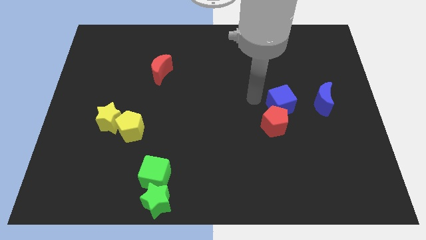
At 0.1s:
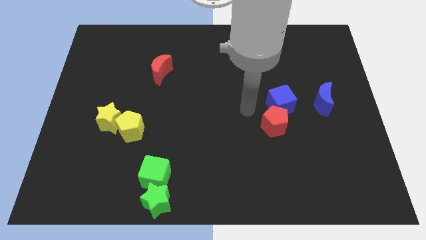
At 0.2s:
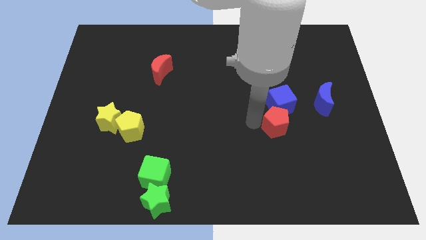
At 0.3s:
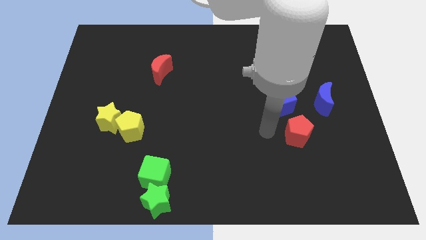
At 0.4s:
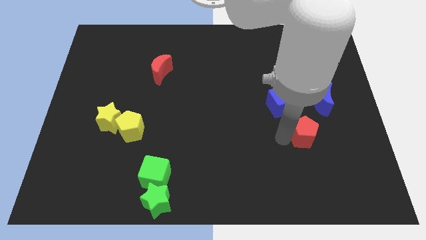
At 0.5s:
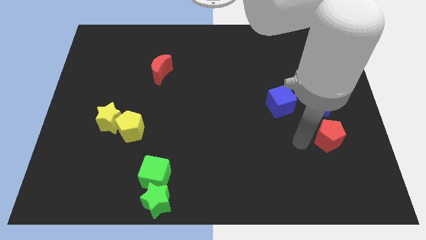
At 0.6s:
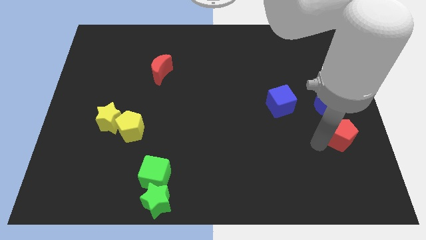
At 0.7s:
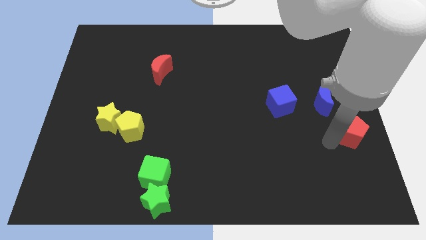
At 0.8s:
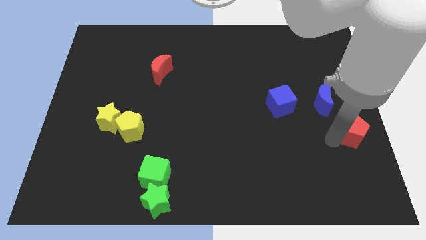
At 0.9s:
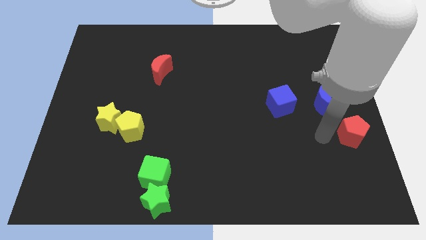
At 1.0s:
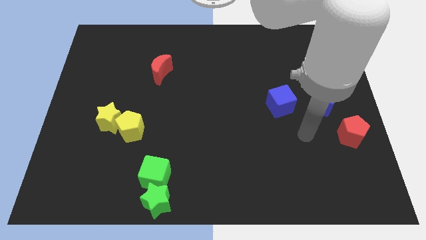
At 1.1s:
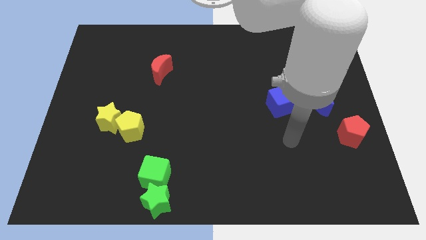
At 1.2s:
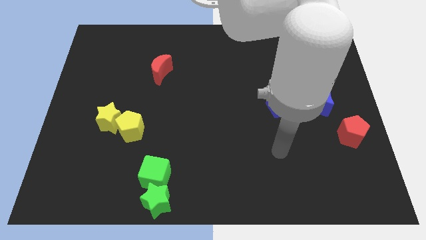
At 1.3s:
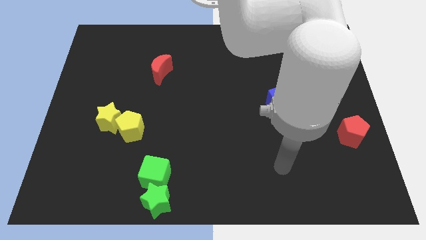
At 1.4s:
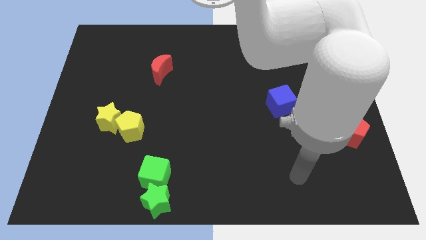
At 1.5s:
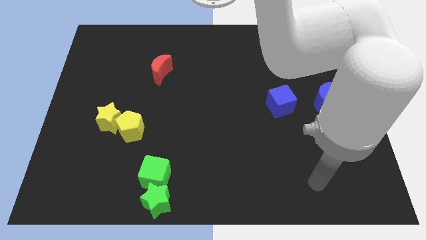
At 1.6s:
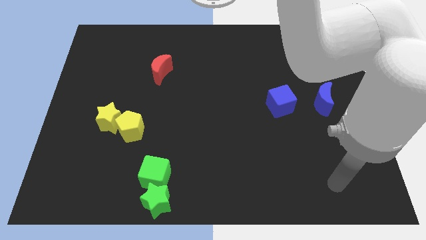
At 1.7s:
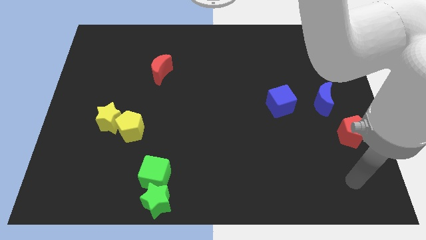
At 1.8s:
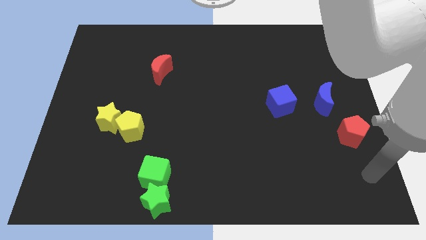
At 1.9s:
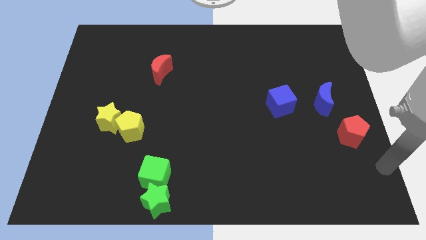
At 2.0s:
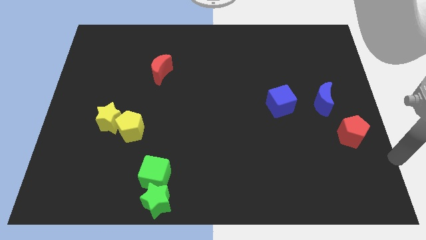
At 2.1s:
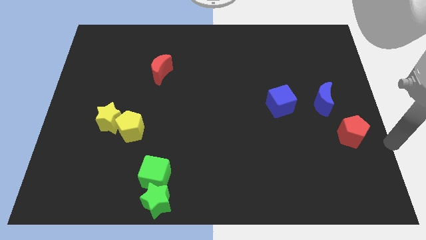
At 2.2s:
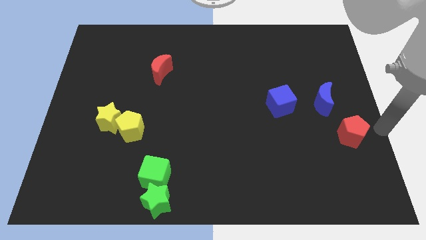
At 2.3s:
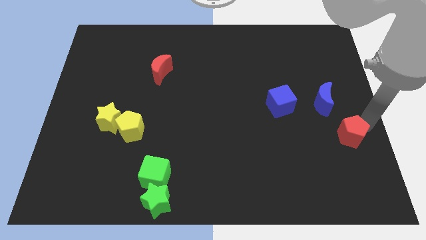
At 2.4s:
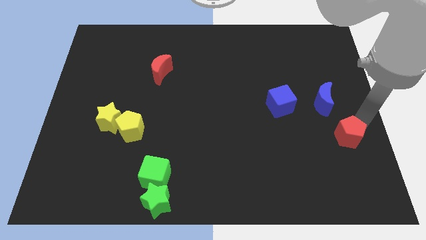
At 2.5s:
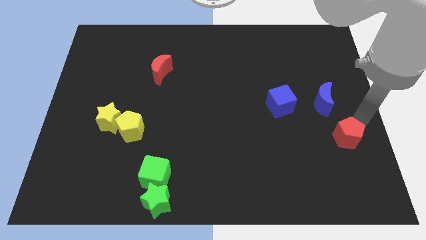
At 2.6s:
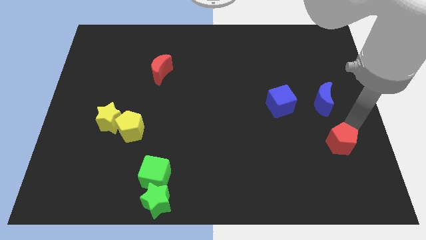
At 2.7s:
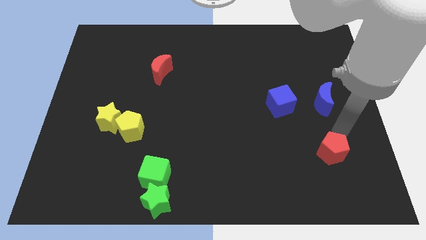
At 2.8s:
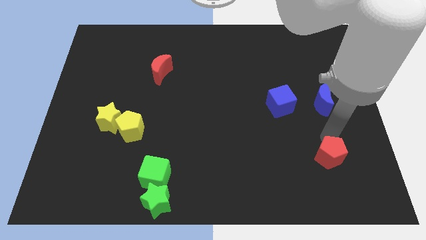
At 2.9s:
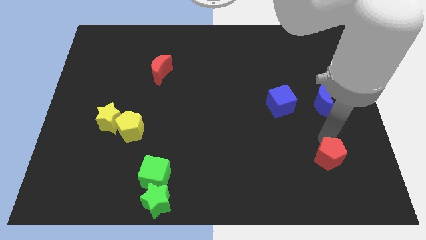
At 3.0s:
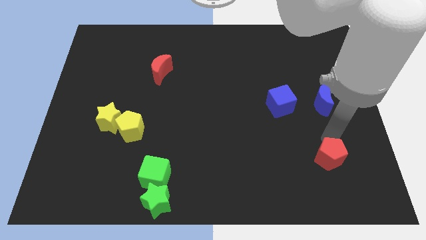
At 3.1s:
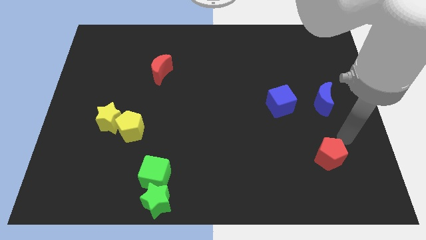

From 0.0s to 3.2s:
move the red pentagon towards the bottom side of the blue moon

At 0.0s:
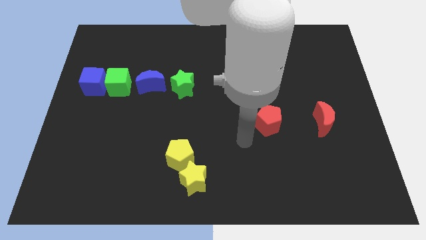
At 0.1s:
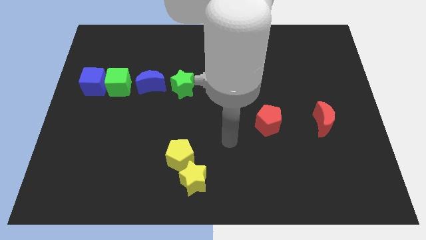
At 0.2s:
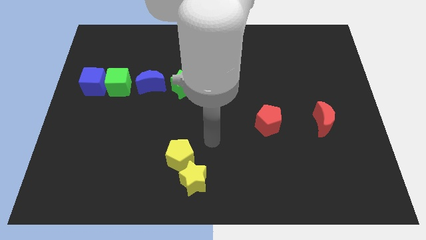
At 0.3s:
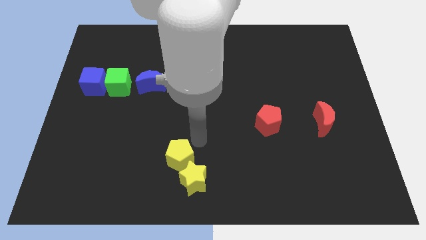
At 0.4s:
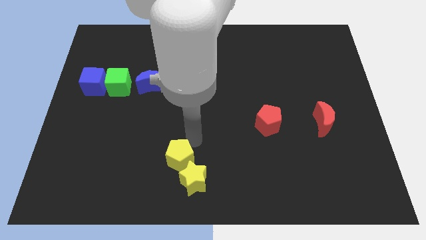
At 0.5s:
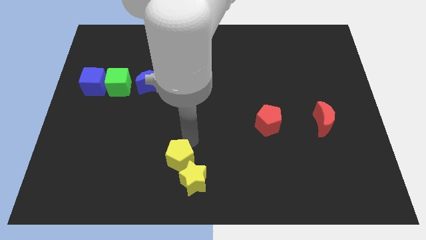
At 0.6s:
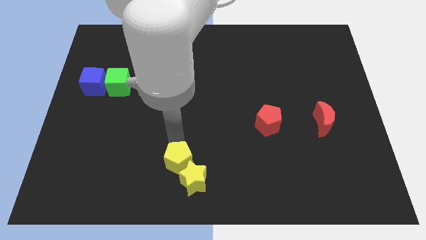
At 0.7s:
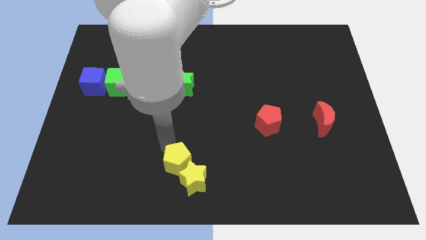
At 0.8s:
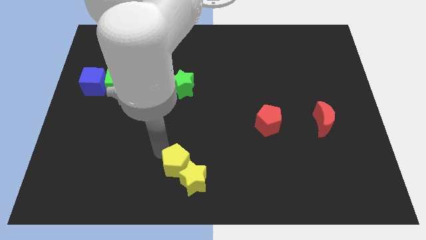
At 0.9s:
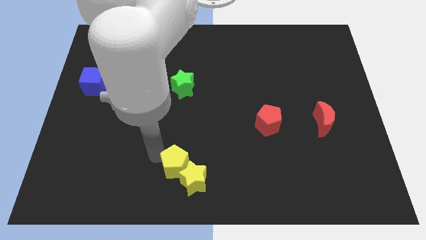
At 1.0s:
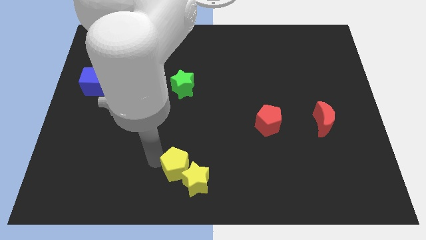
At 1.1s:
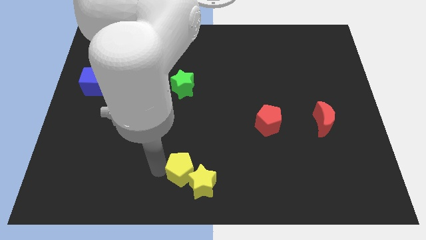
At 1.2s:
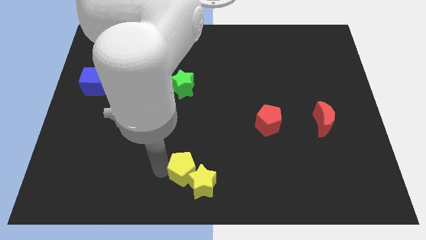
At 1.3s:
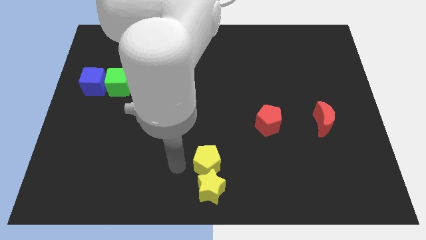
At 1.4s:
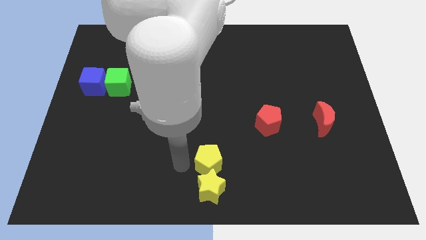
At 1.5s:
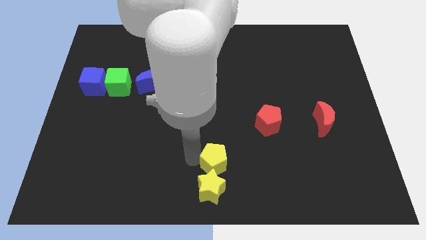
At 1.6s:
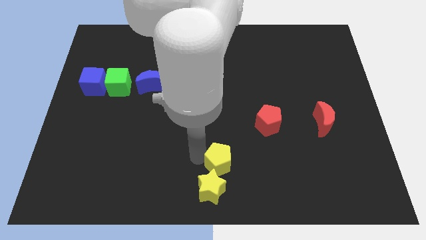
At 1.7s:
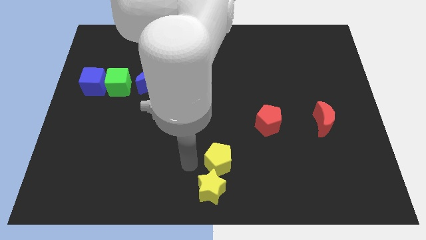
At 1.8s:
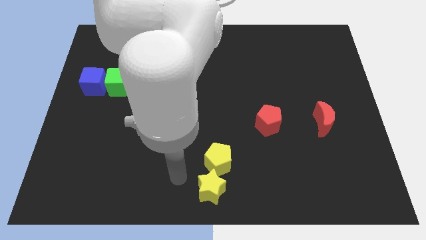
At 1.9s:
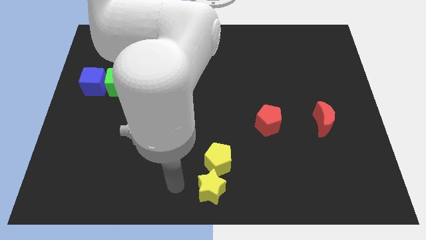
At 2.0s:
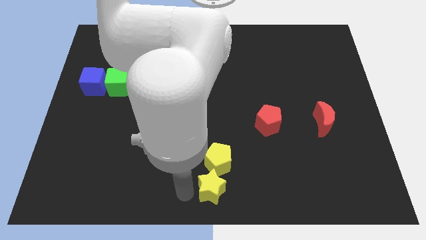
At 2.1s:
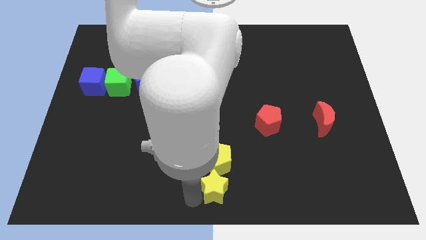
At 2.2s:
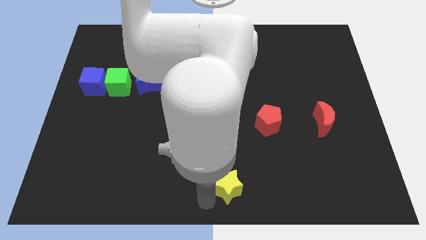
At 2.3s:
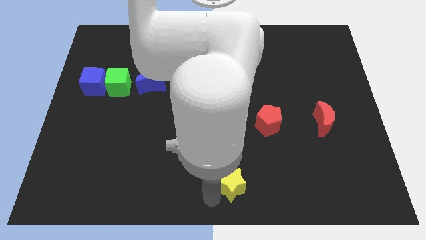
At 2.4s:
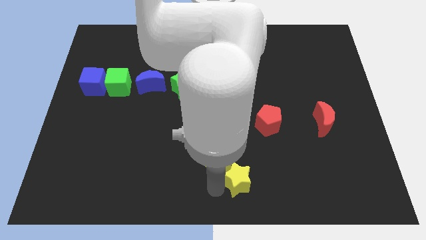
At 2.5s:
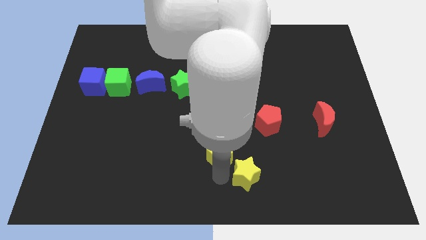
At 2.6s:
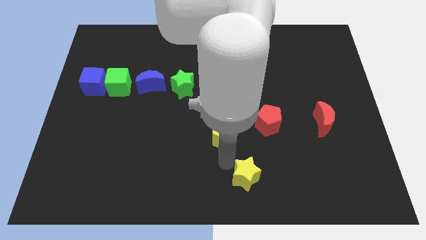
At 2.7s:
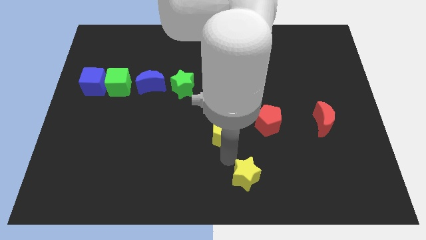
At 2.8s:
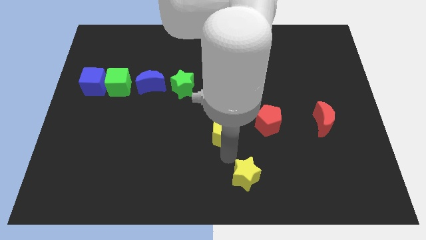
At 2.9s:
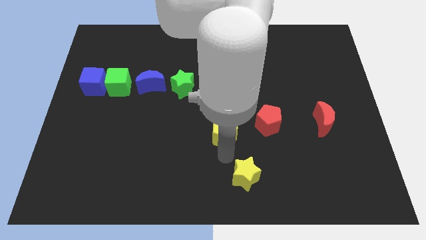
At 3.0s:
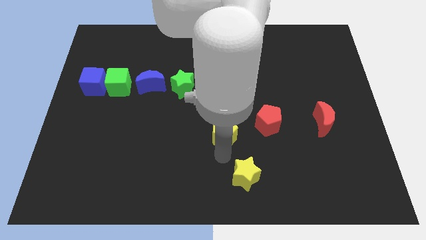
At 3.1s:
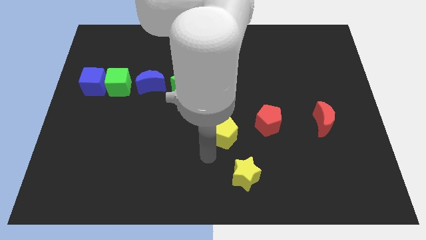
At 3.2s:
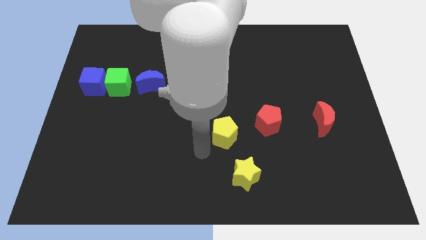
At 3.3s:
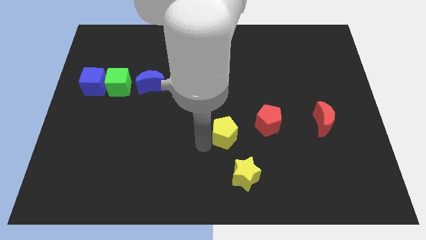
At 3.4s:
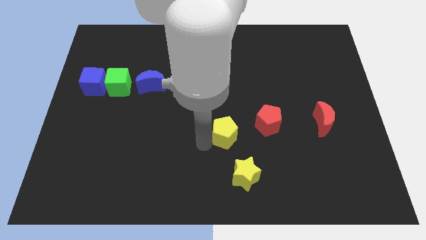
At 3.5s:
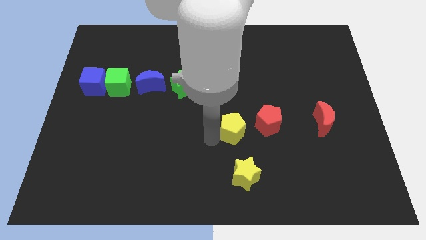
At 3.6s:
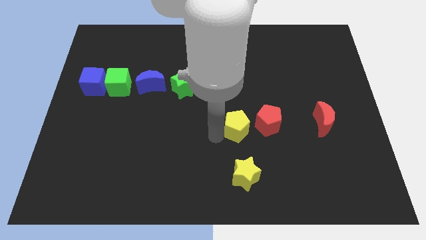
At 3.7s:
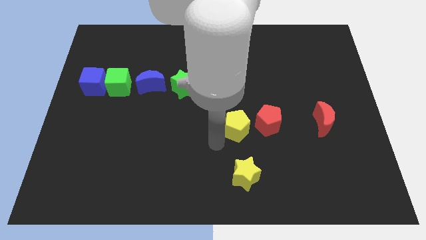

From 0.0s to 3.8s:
push the yellow pentagon to the left of the red pentagon

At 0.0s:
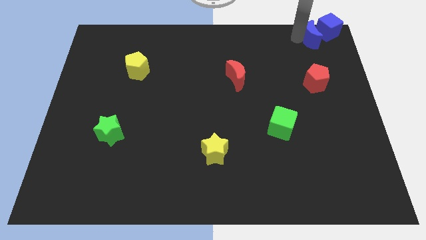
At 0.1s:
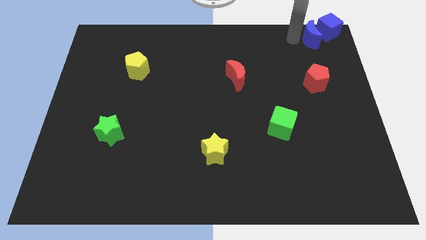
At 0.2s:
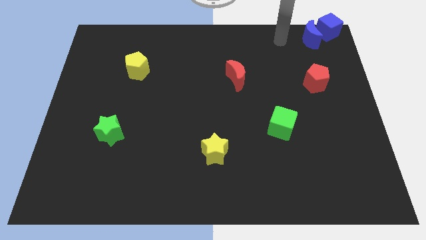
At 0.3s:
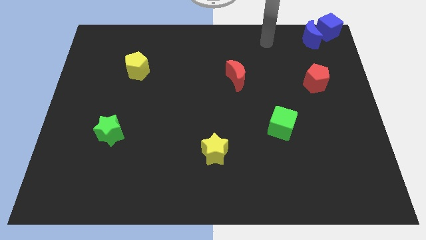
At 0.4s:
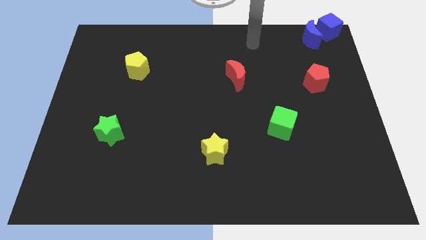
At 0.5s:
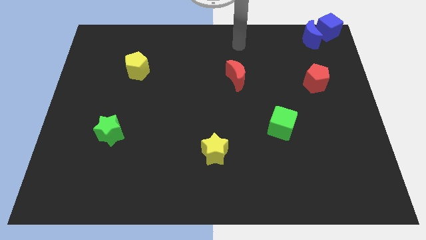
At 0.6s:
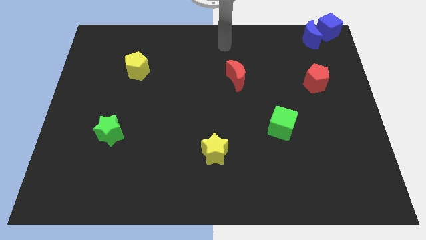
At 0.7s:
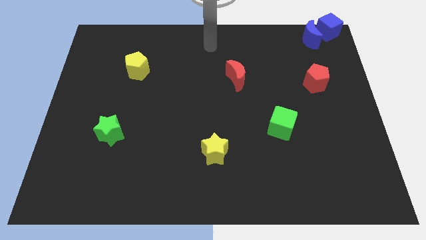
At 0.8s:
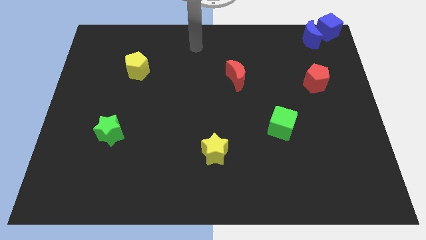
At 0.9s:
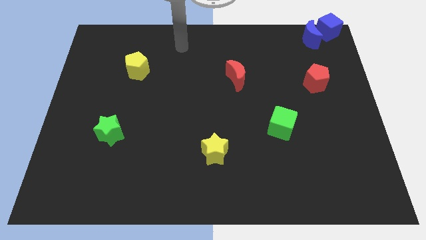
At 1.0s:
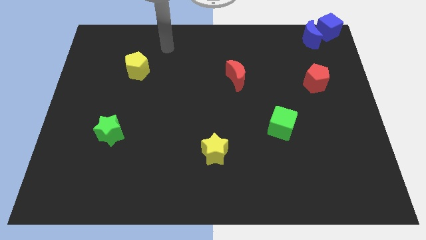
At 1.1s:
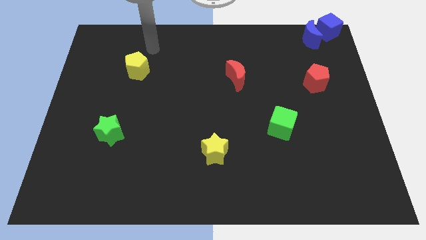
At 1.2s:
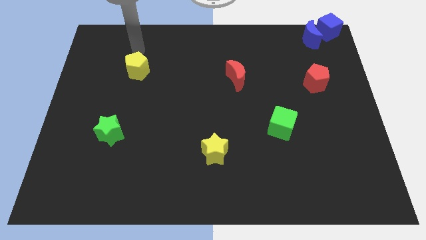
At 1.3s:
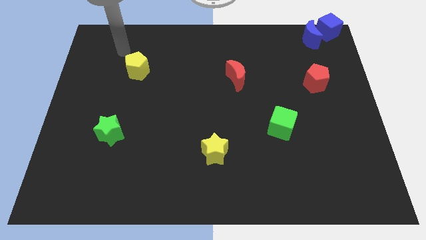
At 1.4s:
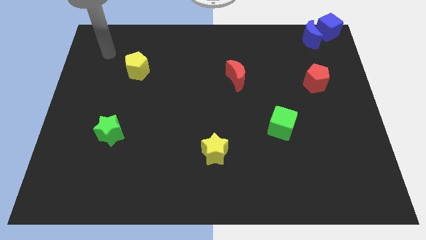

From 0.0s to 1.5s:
move your arm away from the blue moon

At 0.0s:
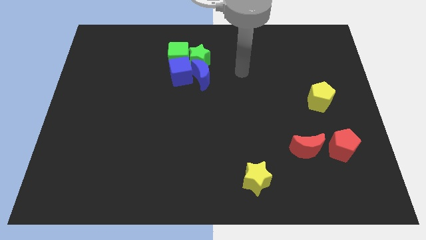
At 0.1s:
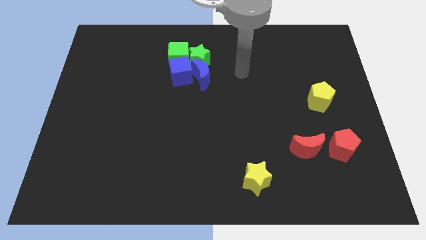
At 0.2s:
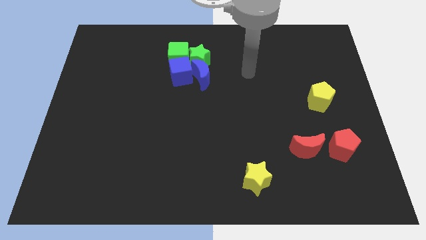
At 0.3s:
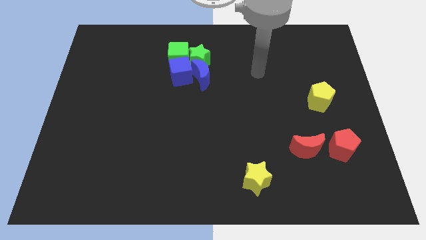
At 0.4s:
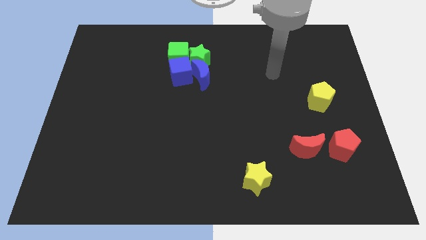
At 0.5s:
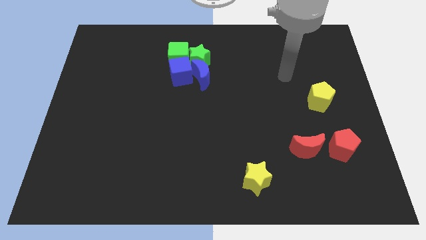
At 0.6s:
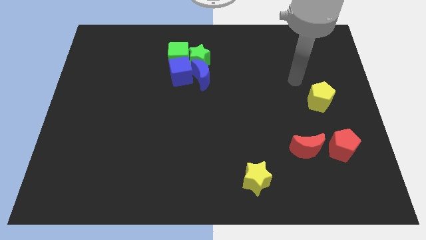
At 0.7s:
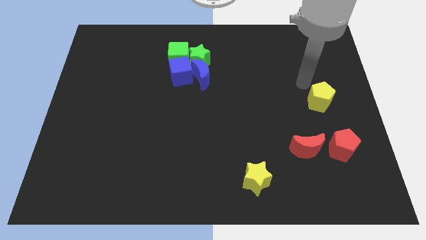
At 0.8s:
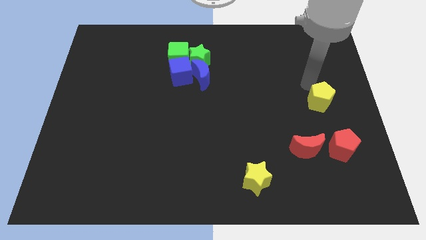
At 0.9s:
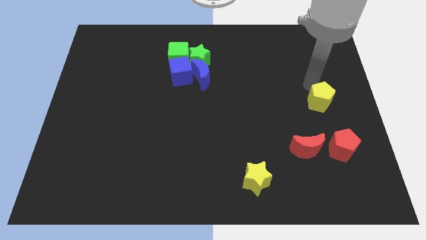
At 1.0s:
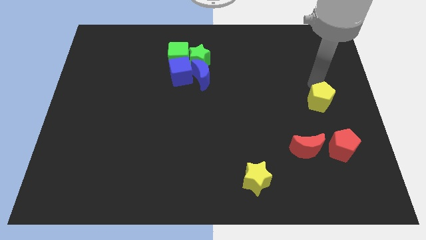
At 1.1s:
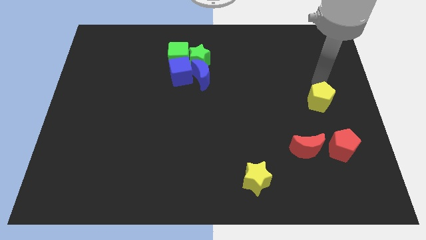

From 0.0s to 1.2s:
touch the top side of the yellow pentagon
